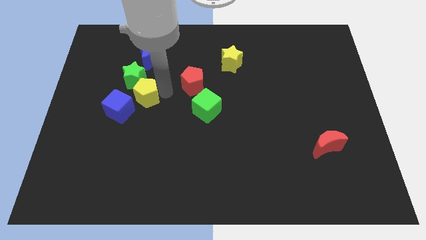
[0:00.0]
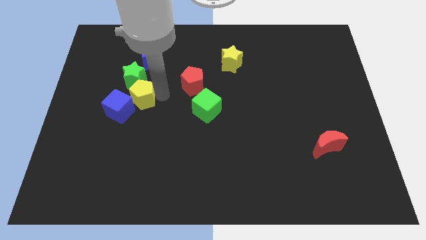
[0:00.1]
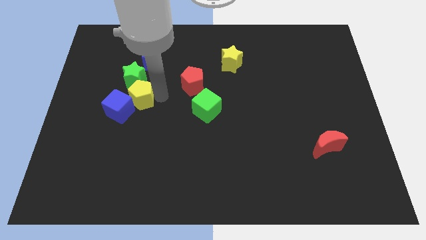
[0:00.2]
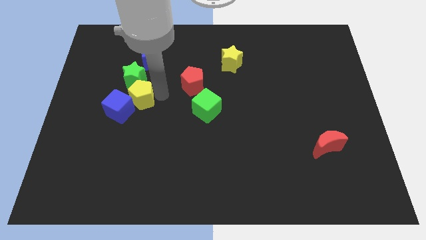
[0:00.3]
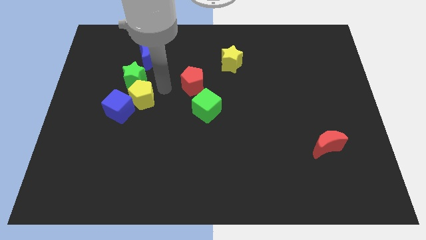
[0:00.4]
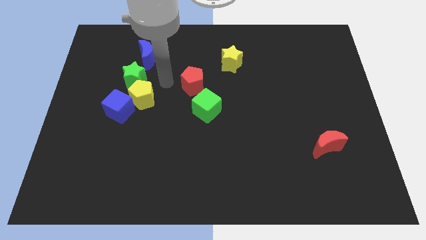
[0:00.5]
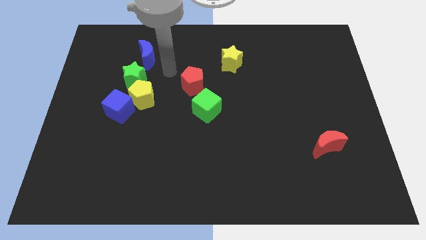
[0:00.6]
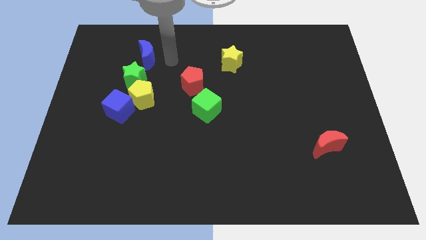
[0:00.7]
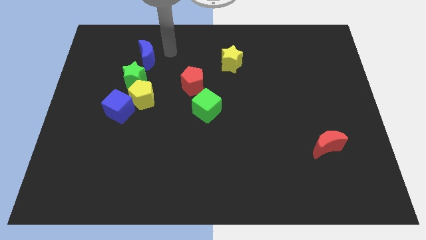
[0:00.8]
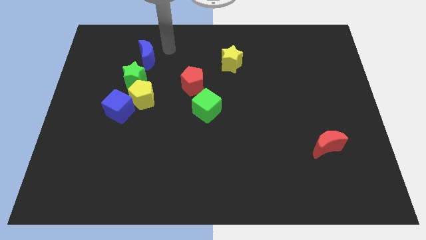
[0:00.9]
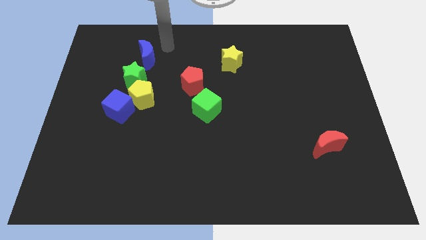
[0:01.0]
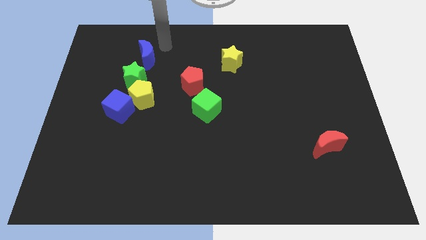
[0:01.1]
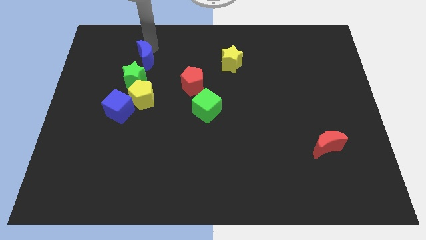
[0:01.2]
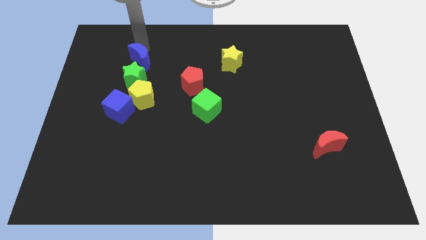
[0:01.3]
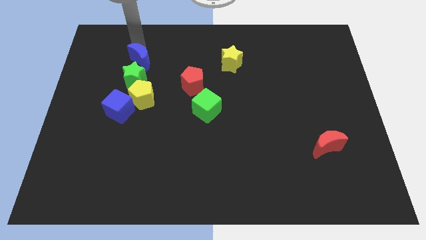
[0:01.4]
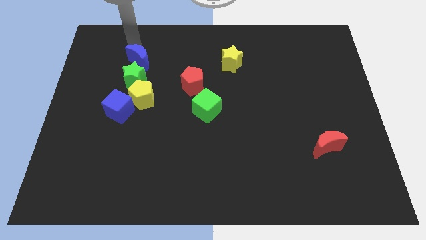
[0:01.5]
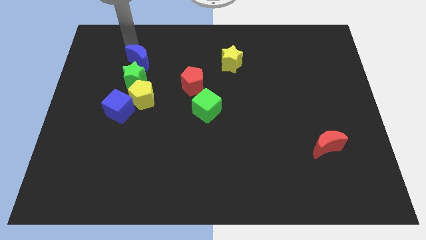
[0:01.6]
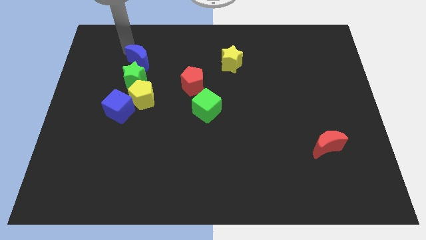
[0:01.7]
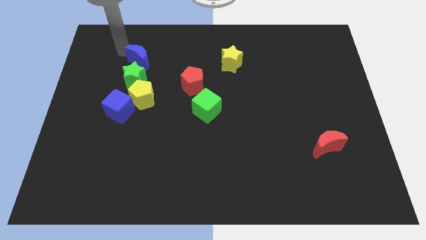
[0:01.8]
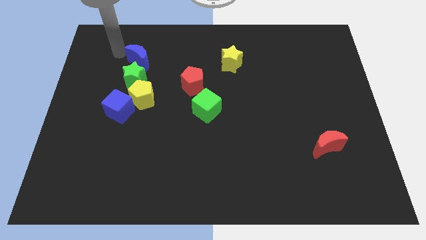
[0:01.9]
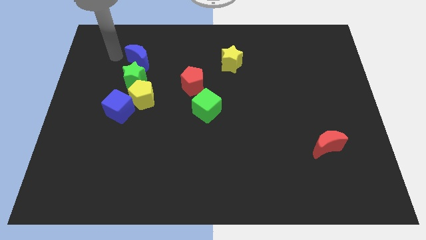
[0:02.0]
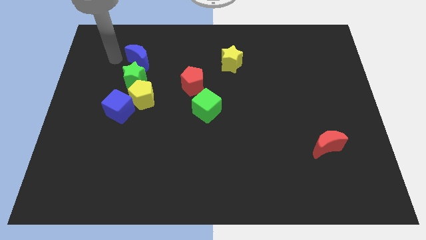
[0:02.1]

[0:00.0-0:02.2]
touch yellow pentagon slightly

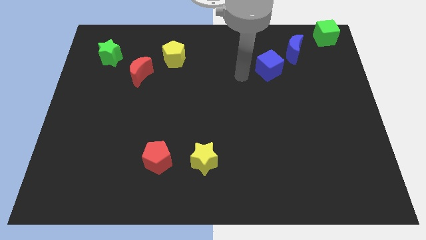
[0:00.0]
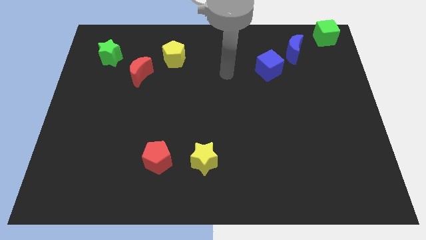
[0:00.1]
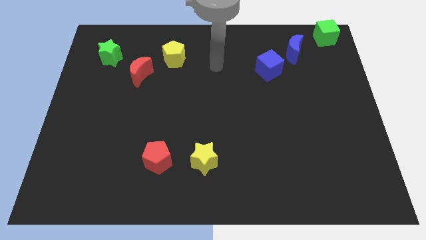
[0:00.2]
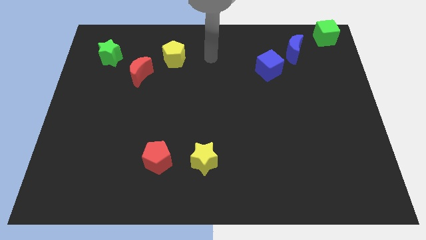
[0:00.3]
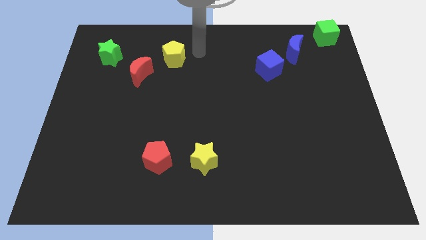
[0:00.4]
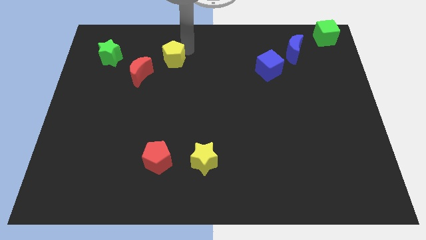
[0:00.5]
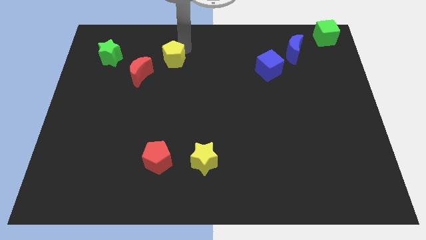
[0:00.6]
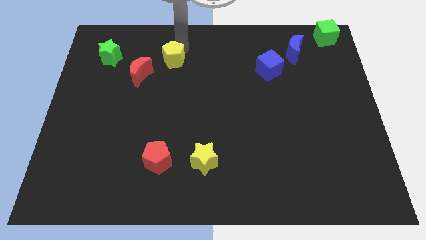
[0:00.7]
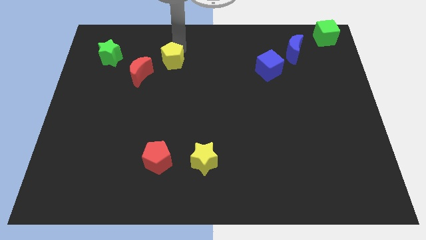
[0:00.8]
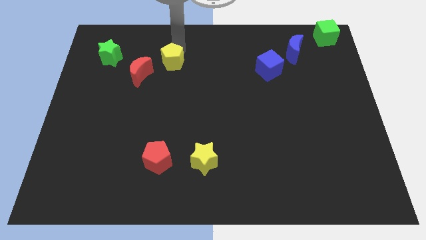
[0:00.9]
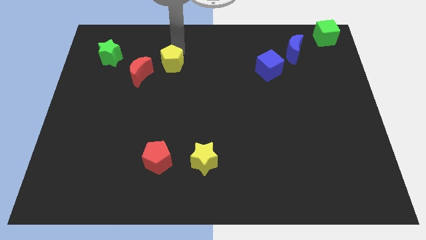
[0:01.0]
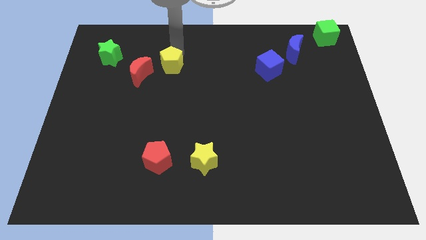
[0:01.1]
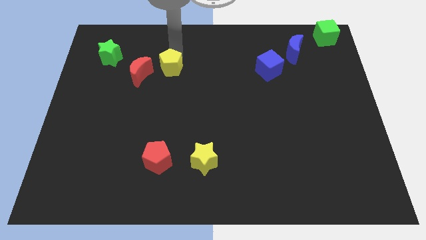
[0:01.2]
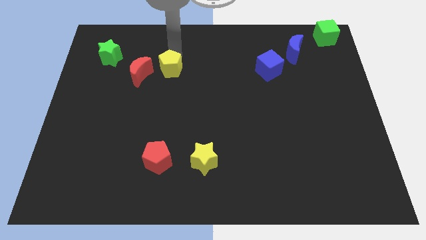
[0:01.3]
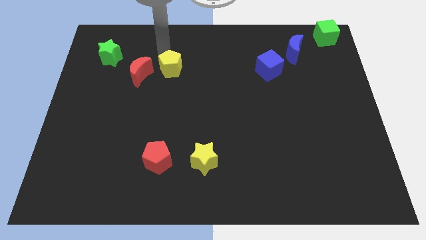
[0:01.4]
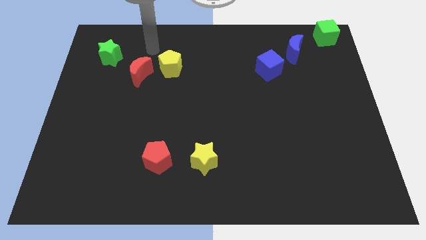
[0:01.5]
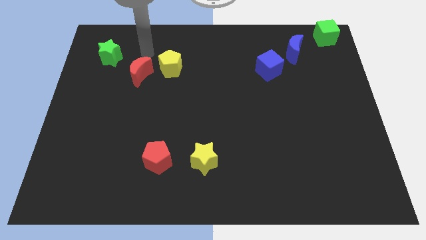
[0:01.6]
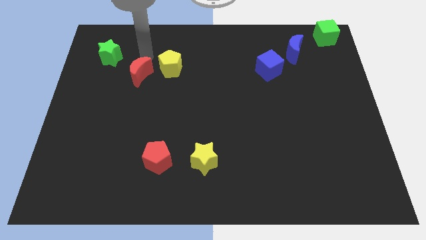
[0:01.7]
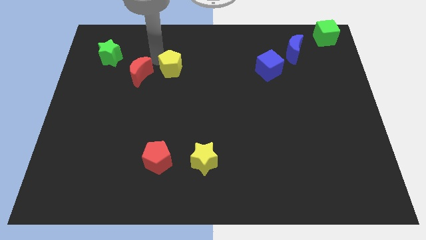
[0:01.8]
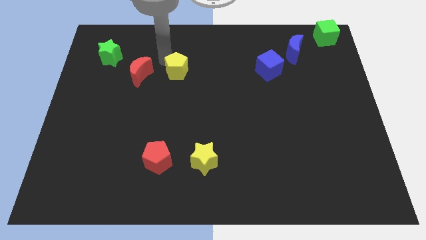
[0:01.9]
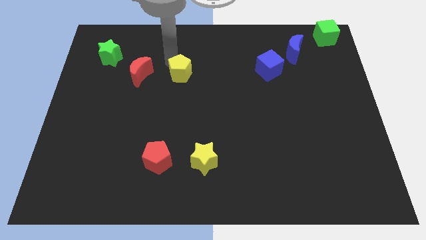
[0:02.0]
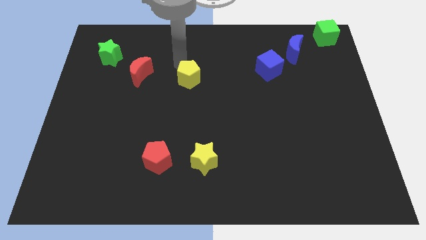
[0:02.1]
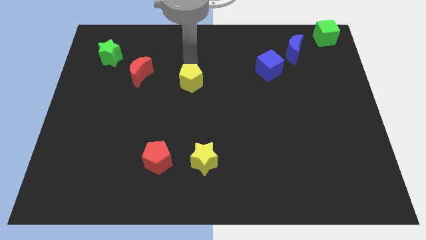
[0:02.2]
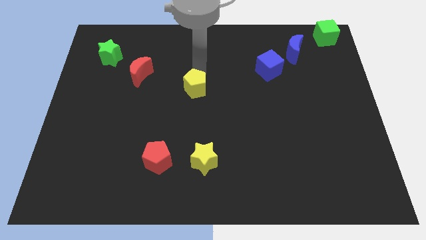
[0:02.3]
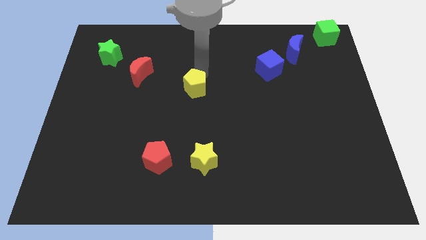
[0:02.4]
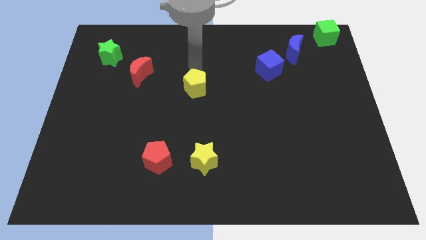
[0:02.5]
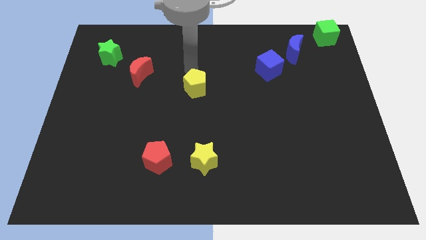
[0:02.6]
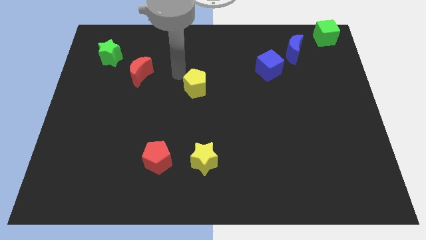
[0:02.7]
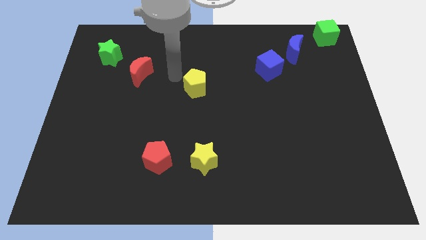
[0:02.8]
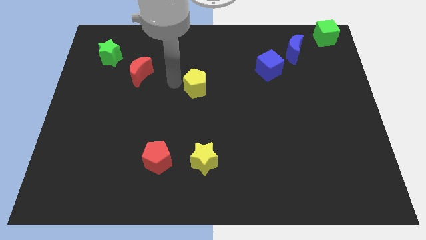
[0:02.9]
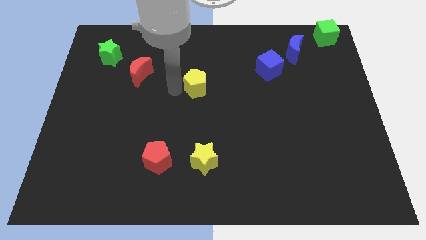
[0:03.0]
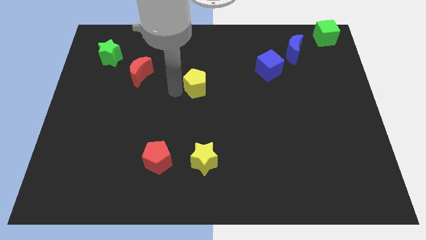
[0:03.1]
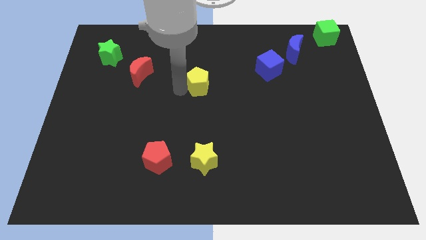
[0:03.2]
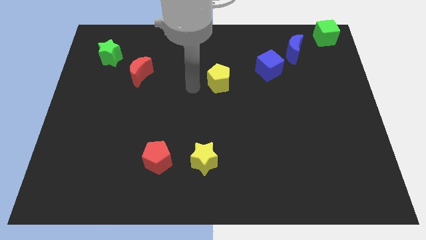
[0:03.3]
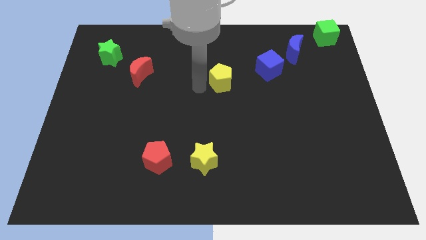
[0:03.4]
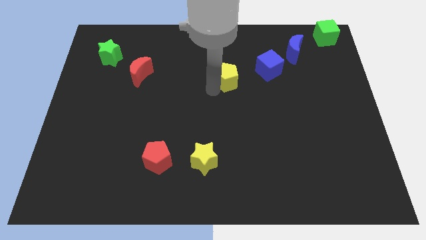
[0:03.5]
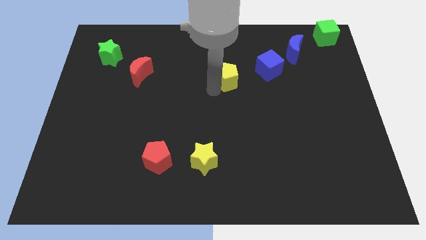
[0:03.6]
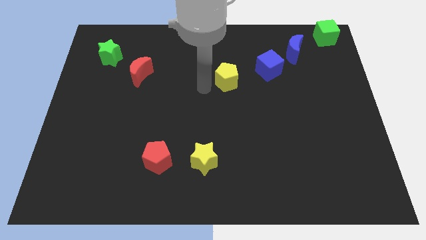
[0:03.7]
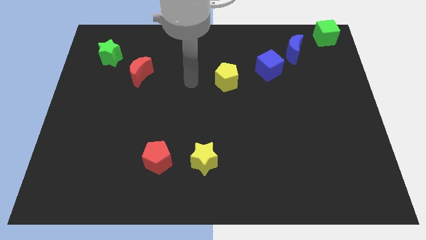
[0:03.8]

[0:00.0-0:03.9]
move the yellow pentagon horizontally to the right side of the red crescent

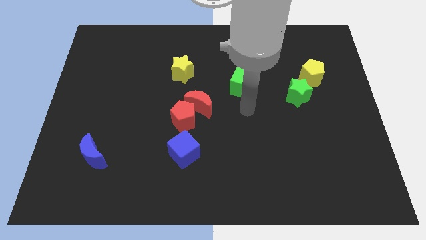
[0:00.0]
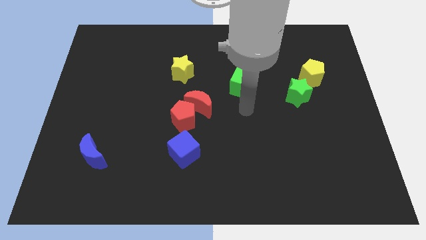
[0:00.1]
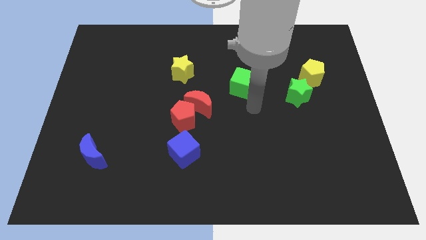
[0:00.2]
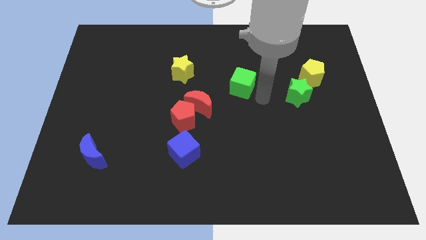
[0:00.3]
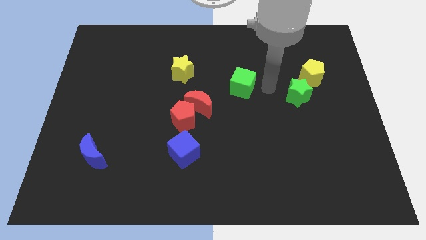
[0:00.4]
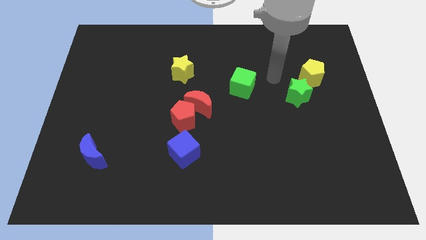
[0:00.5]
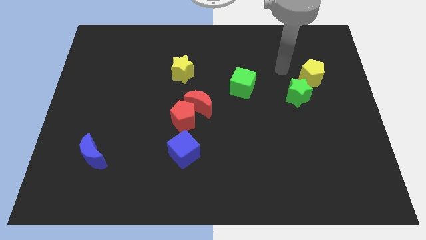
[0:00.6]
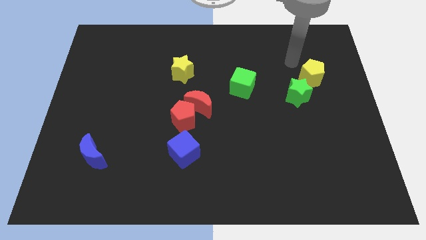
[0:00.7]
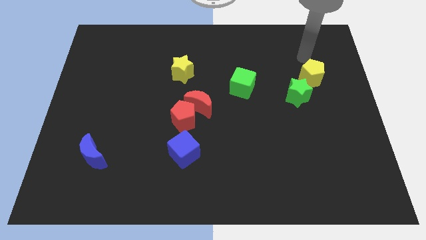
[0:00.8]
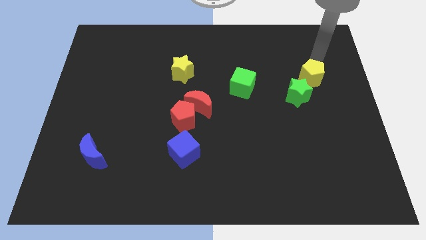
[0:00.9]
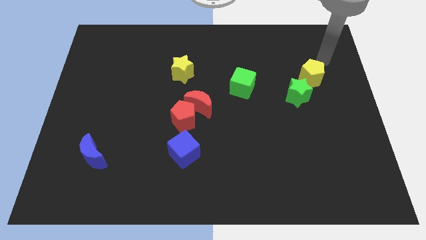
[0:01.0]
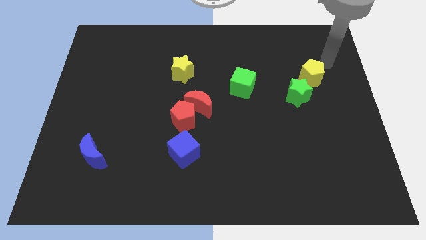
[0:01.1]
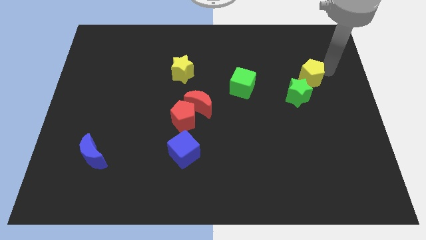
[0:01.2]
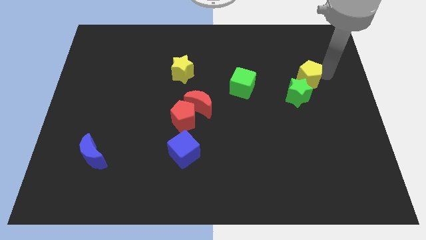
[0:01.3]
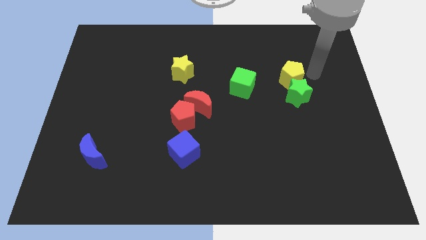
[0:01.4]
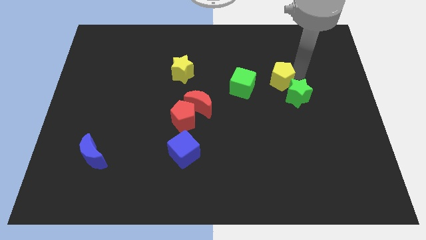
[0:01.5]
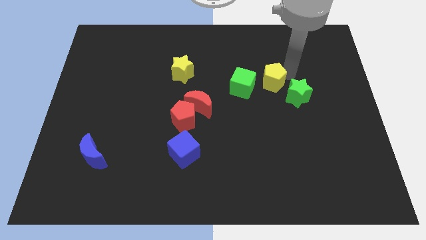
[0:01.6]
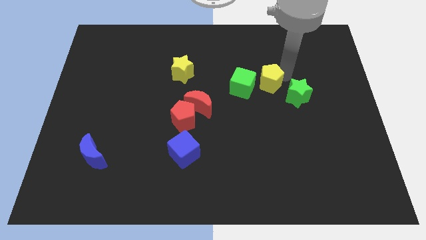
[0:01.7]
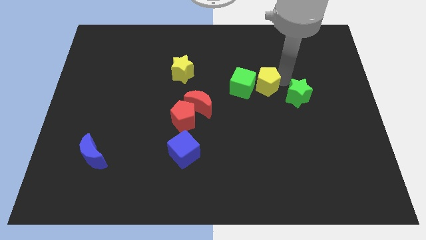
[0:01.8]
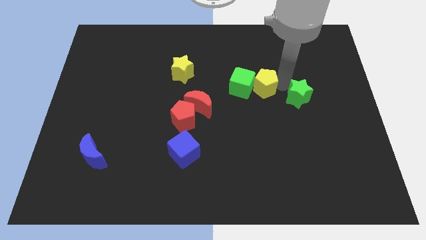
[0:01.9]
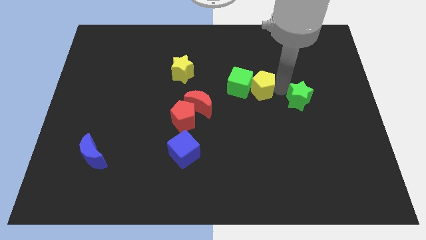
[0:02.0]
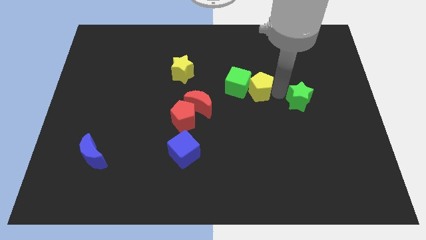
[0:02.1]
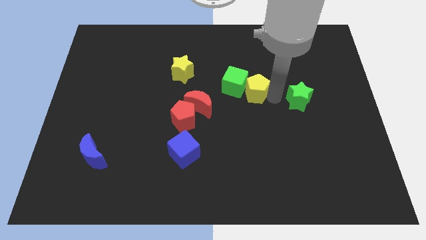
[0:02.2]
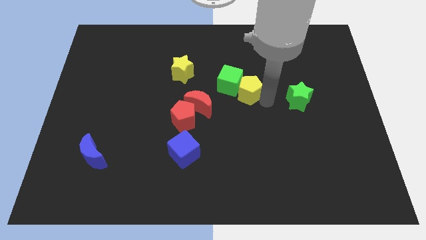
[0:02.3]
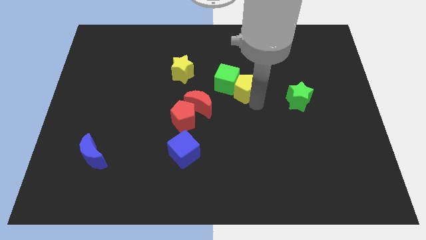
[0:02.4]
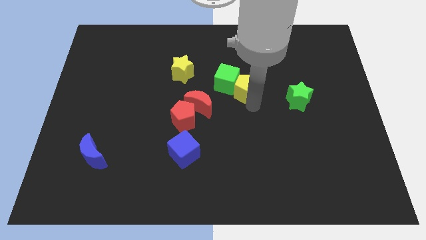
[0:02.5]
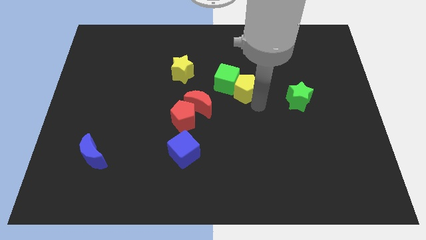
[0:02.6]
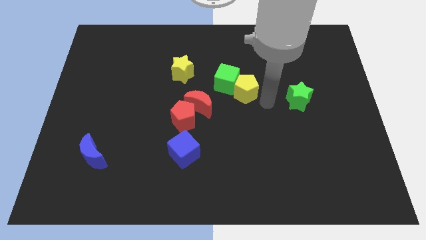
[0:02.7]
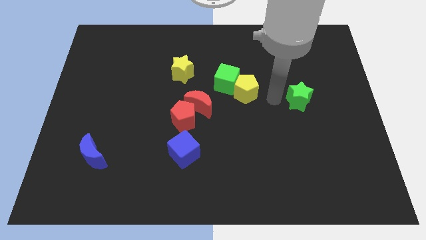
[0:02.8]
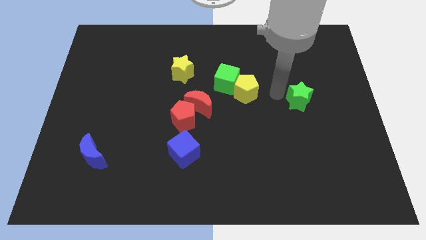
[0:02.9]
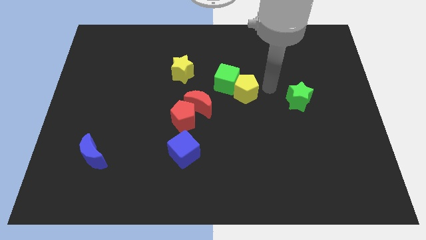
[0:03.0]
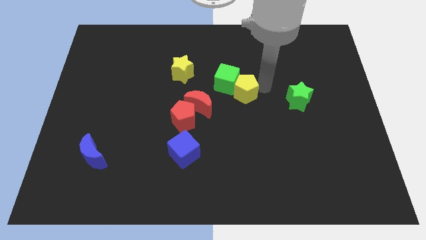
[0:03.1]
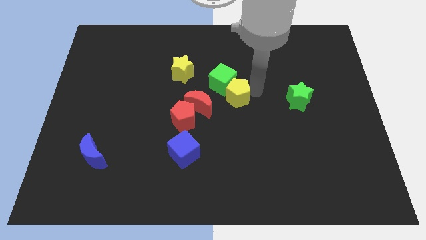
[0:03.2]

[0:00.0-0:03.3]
move the yellow pentagon into the green cube
